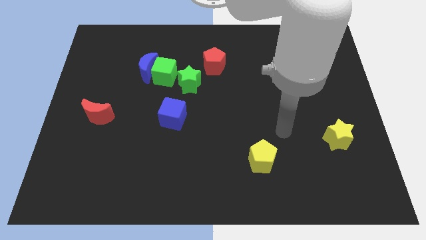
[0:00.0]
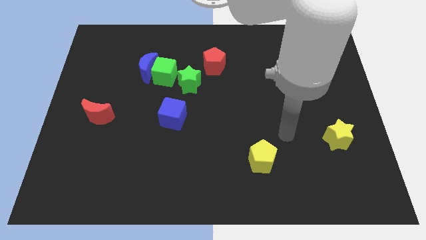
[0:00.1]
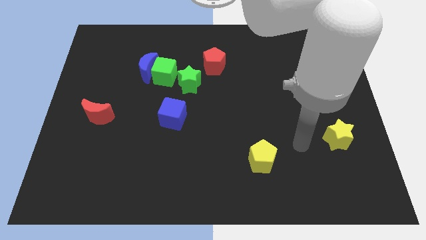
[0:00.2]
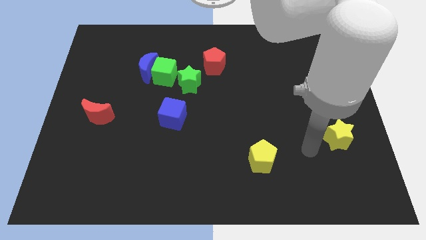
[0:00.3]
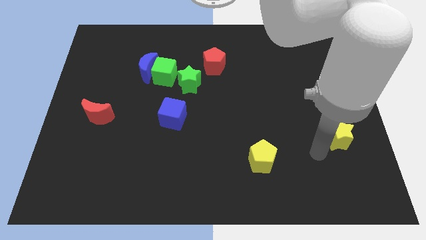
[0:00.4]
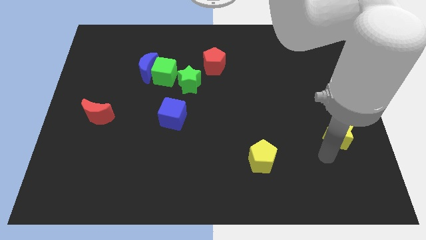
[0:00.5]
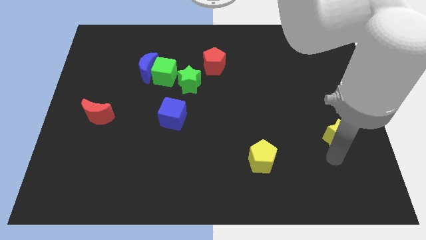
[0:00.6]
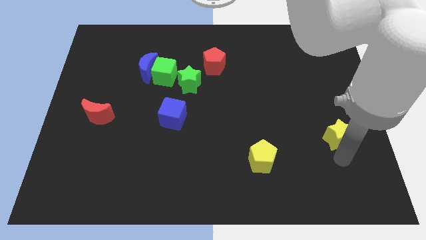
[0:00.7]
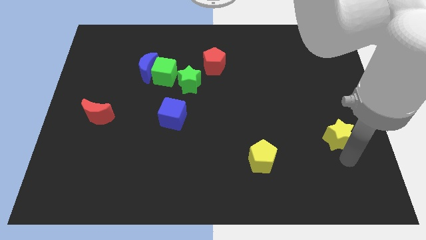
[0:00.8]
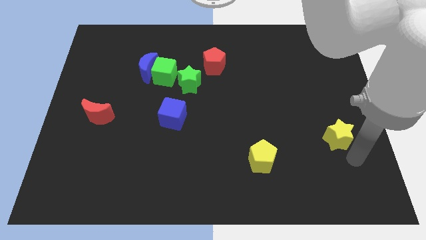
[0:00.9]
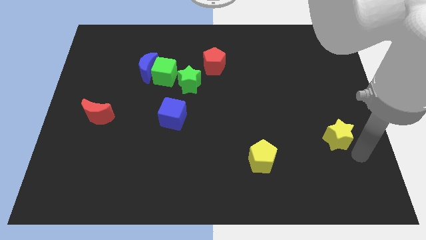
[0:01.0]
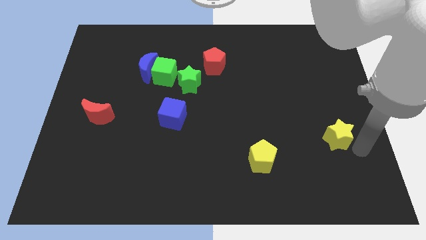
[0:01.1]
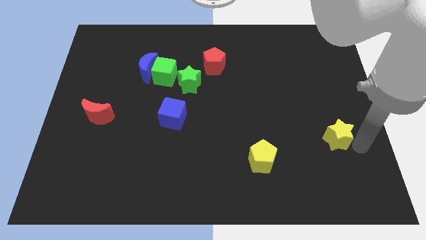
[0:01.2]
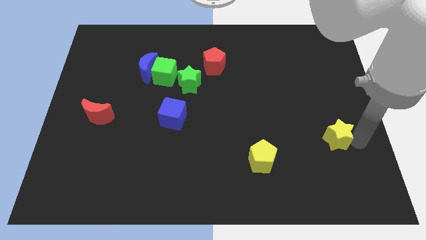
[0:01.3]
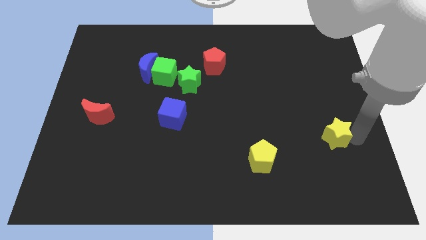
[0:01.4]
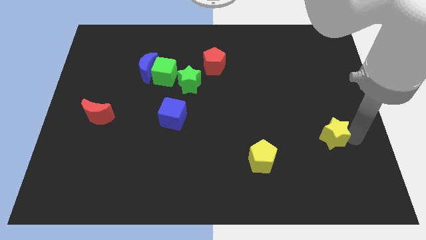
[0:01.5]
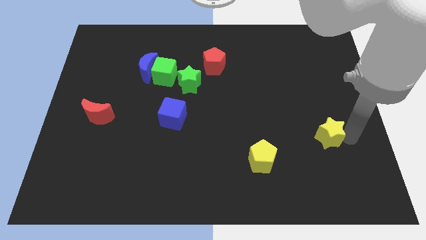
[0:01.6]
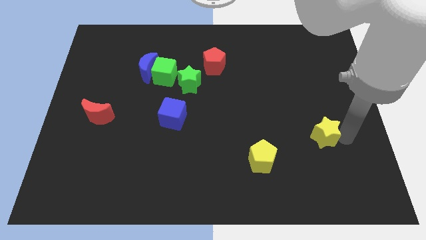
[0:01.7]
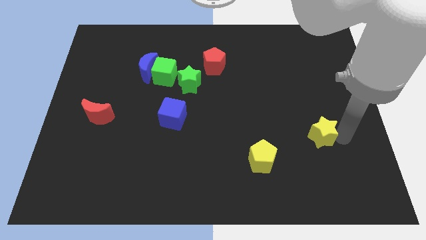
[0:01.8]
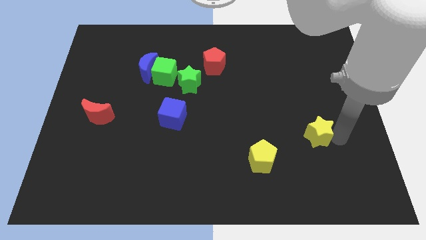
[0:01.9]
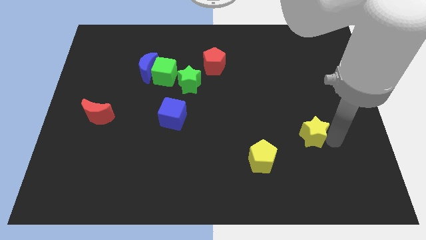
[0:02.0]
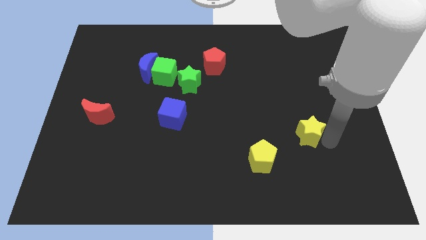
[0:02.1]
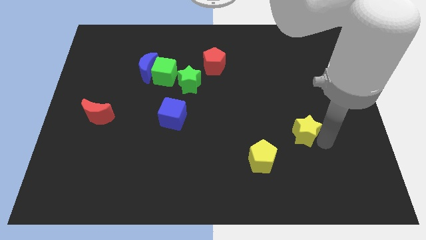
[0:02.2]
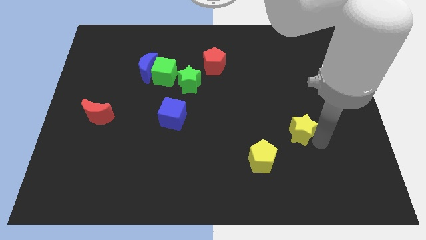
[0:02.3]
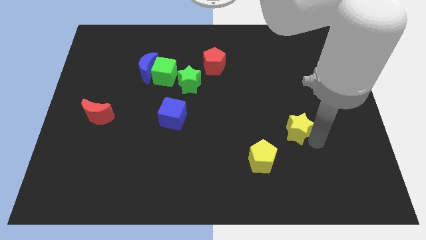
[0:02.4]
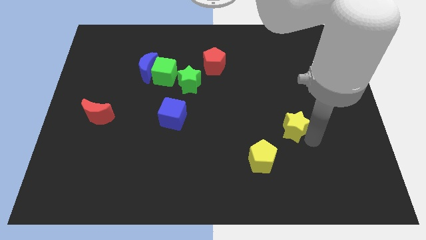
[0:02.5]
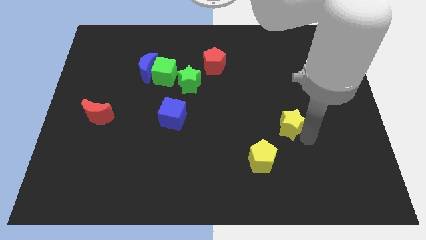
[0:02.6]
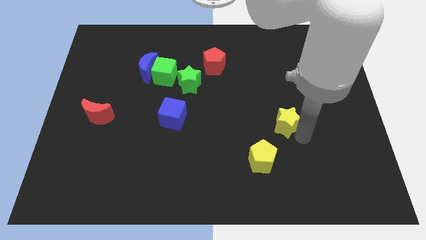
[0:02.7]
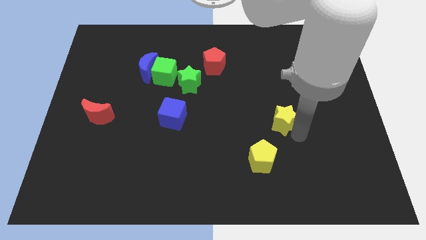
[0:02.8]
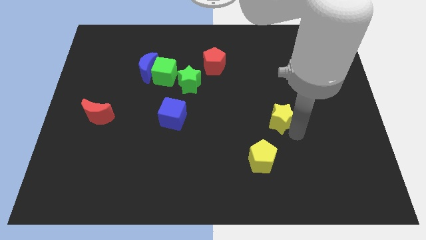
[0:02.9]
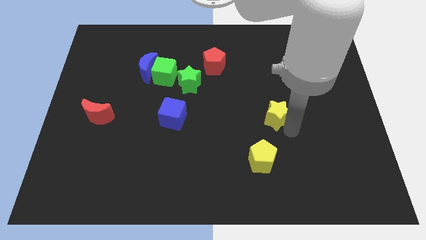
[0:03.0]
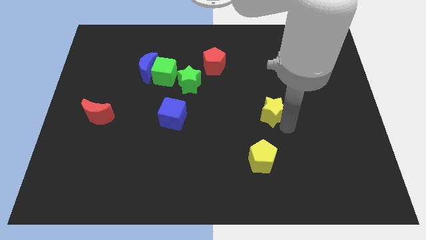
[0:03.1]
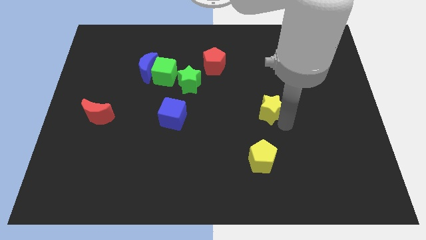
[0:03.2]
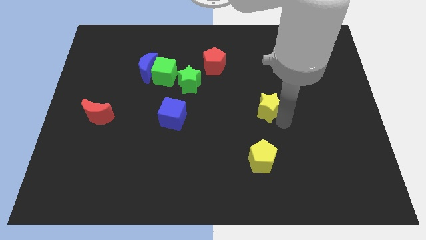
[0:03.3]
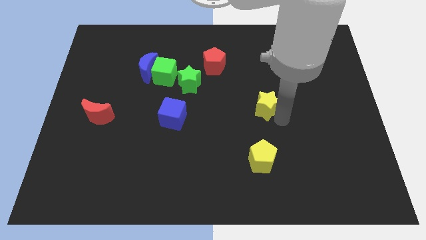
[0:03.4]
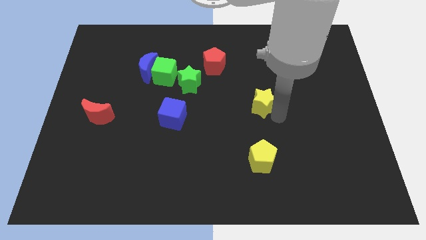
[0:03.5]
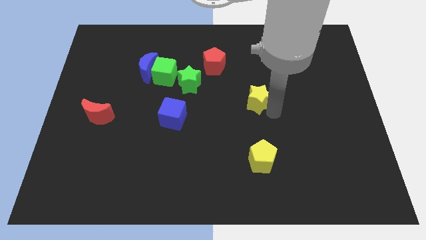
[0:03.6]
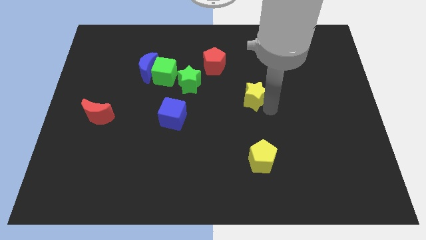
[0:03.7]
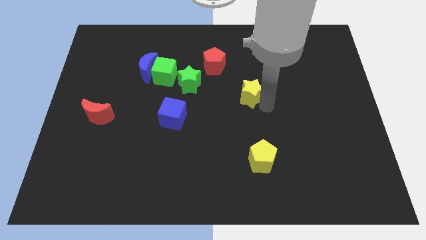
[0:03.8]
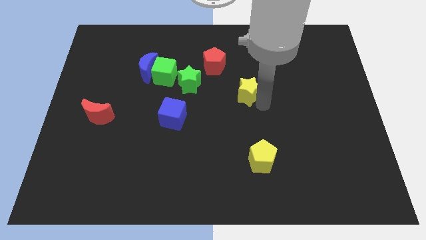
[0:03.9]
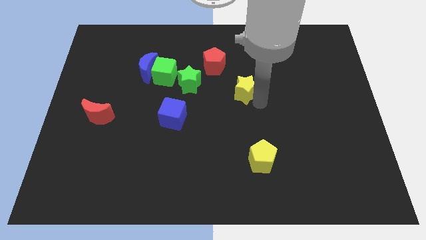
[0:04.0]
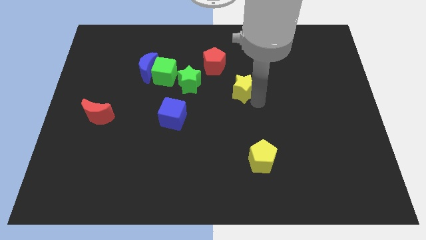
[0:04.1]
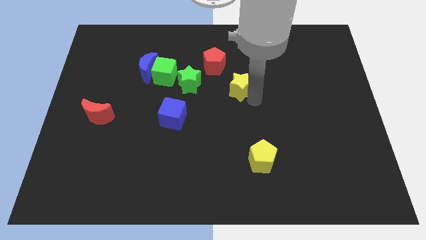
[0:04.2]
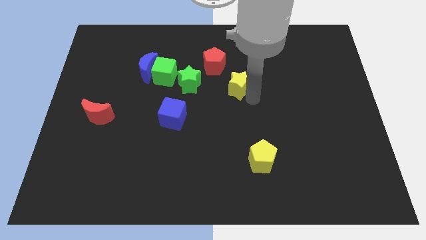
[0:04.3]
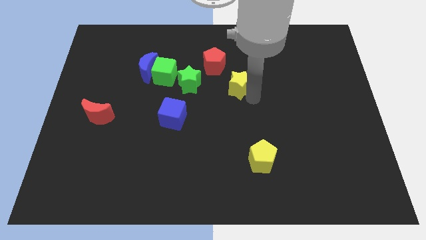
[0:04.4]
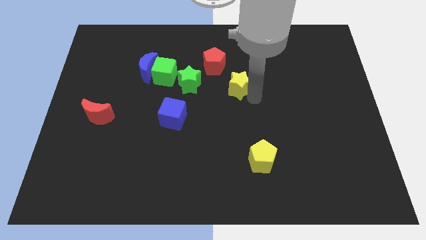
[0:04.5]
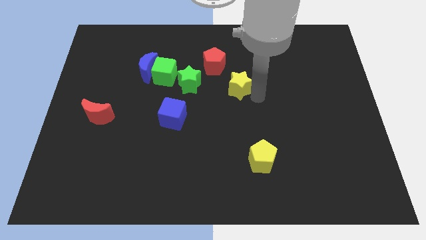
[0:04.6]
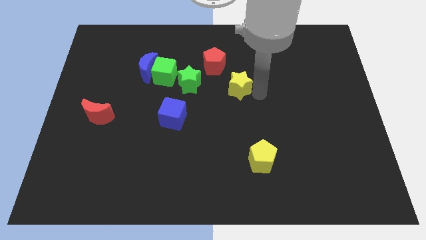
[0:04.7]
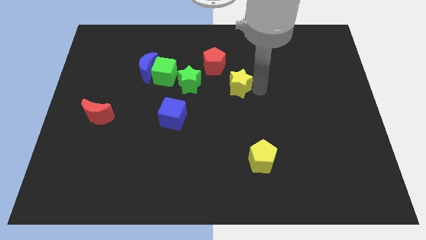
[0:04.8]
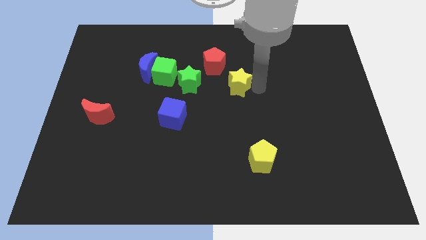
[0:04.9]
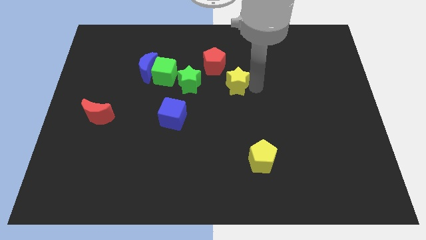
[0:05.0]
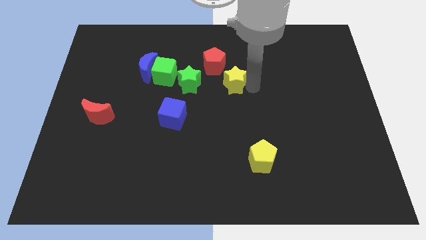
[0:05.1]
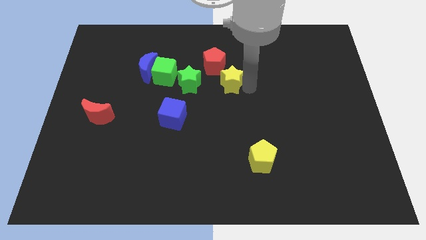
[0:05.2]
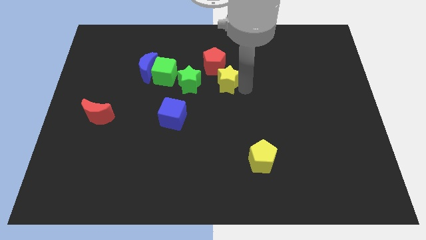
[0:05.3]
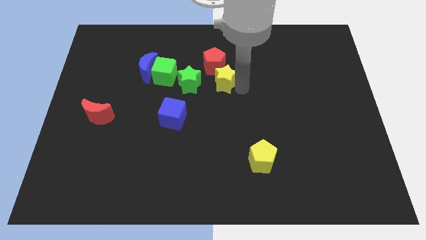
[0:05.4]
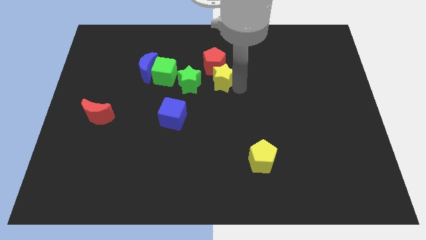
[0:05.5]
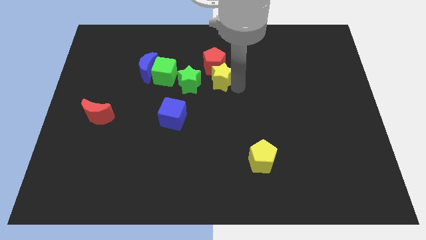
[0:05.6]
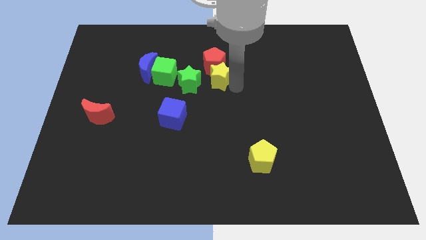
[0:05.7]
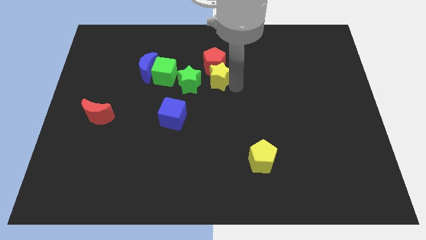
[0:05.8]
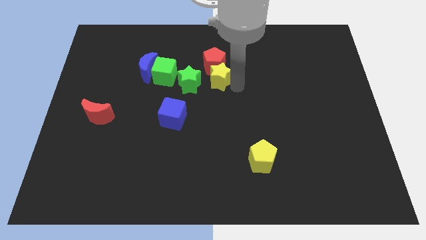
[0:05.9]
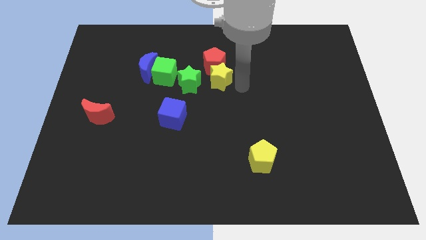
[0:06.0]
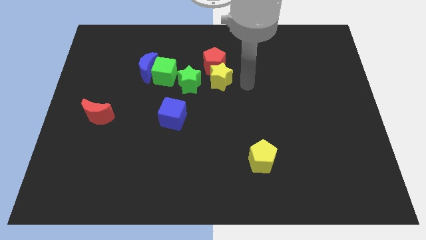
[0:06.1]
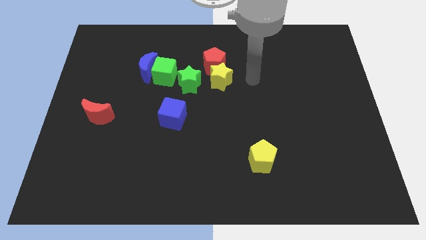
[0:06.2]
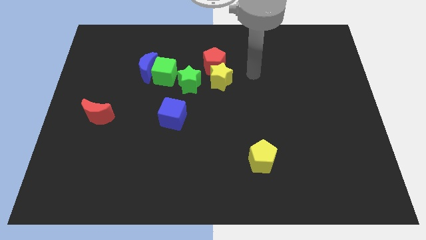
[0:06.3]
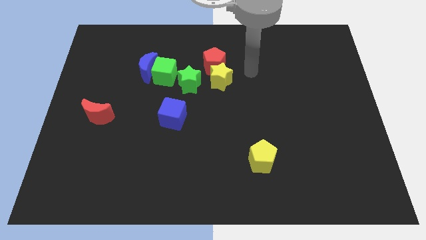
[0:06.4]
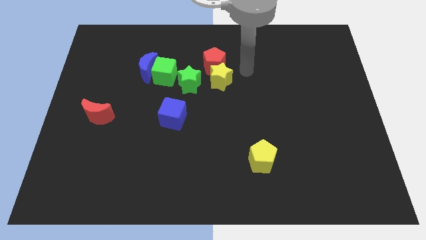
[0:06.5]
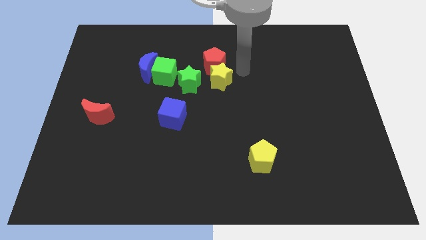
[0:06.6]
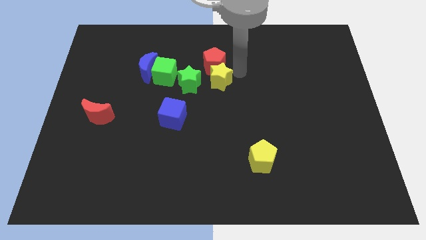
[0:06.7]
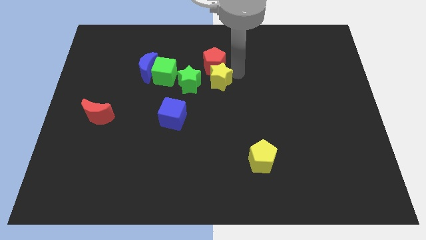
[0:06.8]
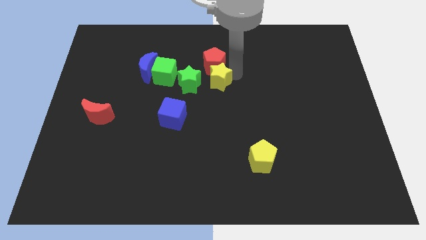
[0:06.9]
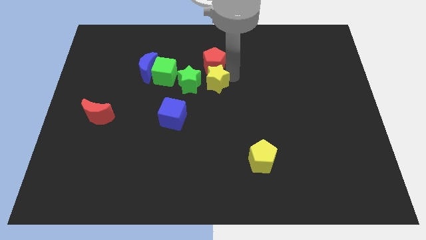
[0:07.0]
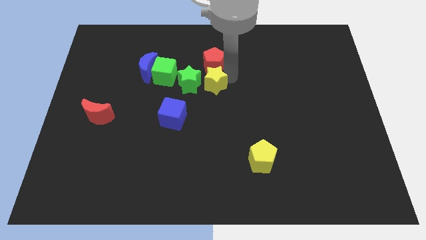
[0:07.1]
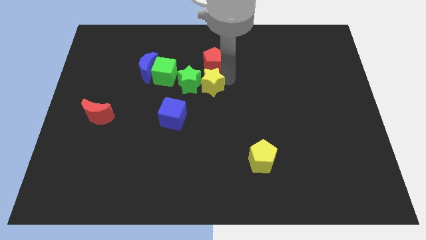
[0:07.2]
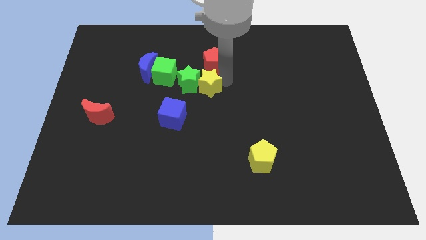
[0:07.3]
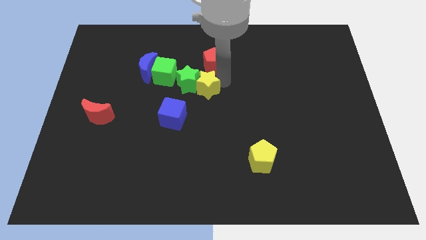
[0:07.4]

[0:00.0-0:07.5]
slide the yellow star towards the green star

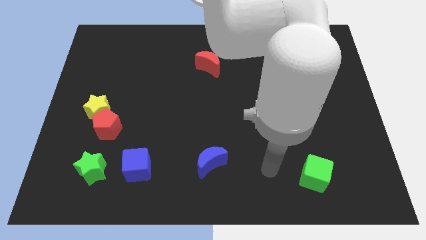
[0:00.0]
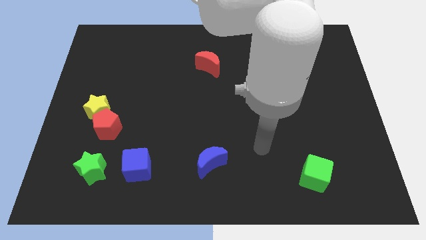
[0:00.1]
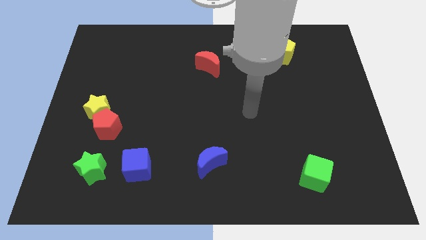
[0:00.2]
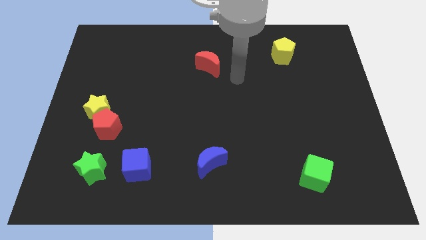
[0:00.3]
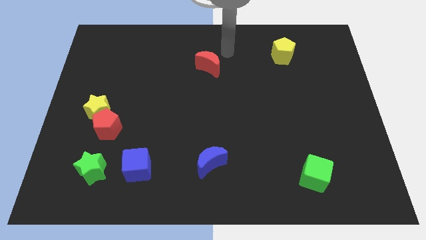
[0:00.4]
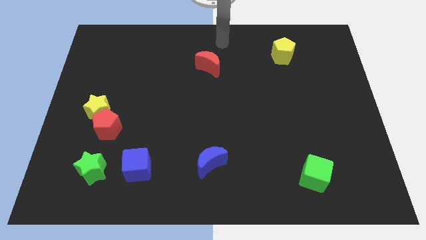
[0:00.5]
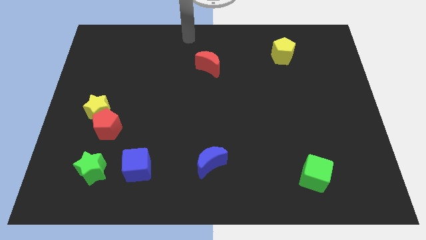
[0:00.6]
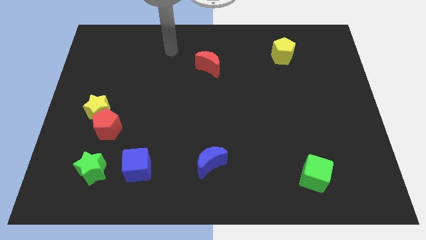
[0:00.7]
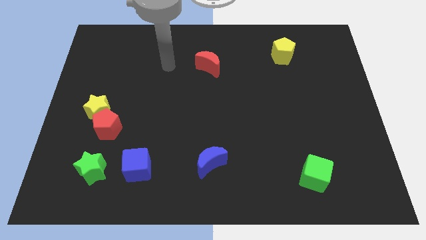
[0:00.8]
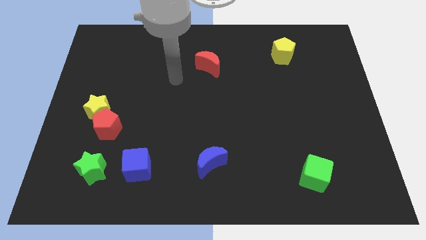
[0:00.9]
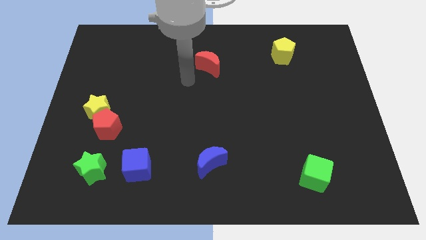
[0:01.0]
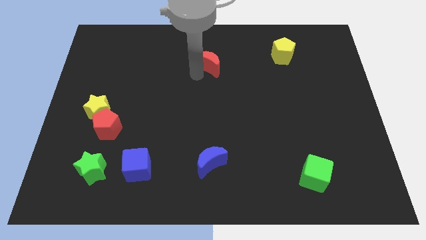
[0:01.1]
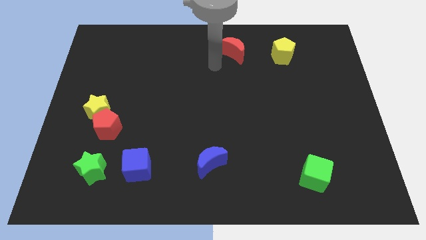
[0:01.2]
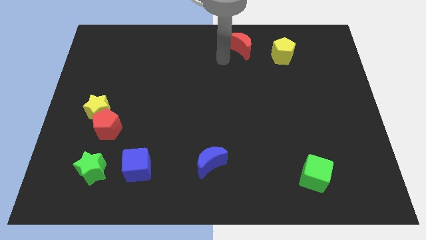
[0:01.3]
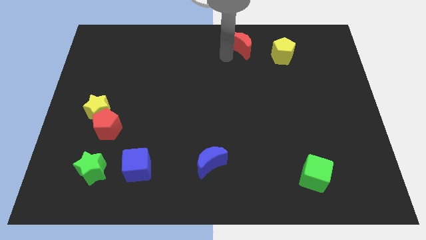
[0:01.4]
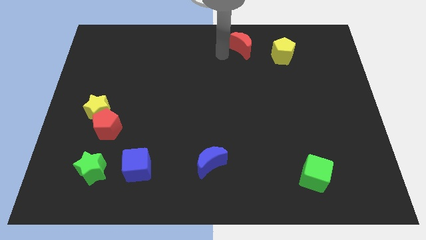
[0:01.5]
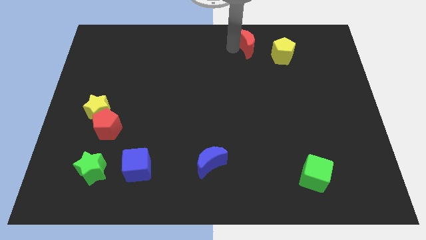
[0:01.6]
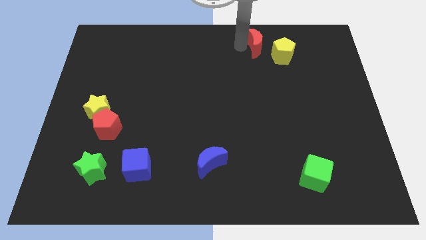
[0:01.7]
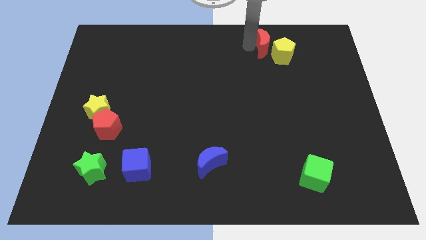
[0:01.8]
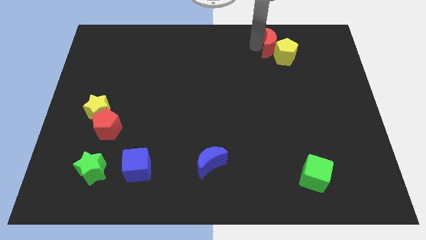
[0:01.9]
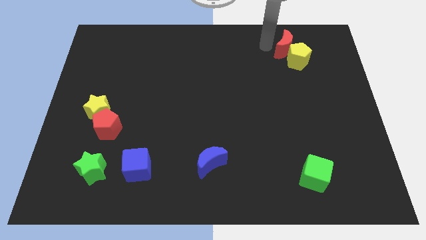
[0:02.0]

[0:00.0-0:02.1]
put the red moon towards the yellow pentagon
